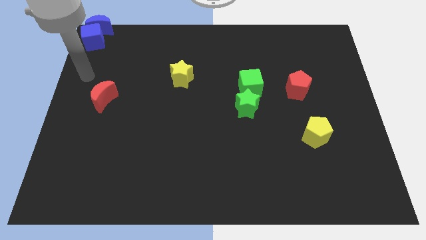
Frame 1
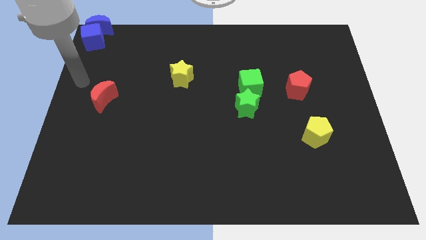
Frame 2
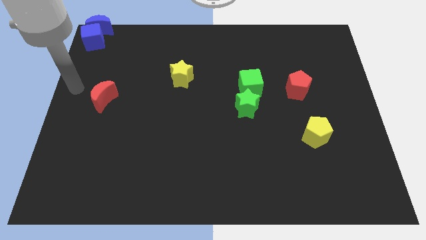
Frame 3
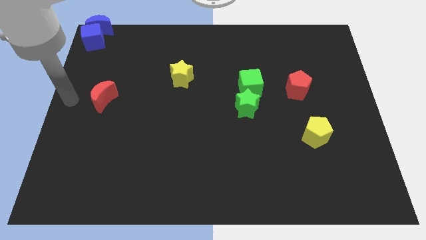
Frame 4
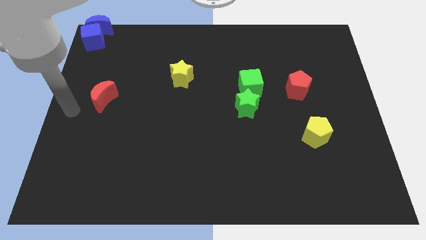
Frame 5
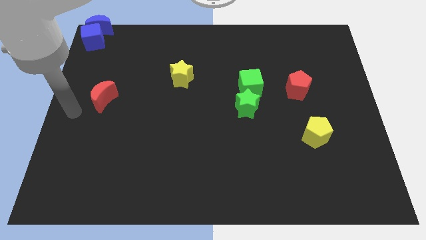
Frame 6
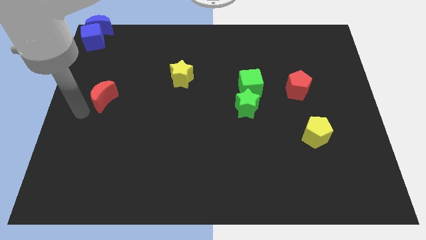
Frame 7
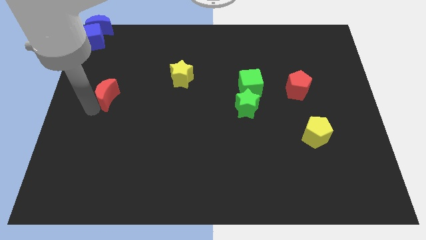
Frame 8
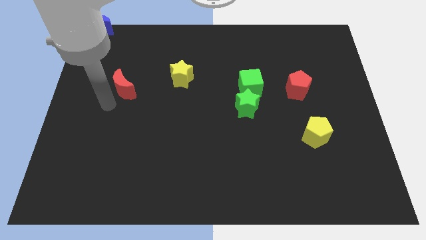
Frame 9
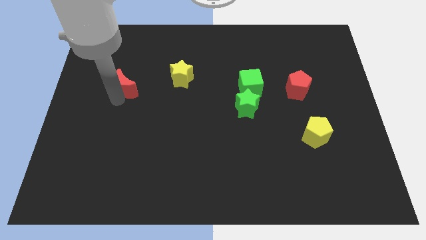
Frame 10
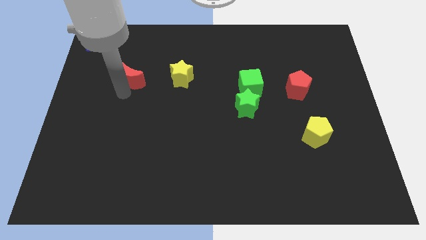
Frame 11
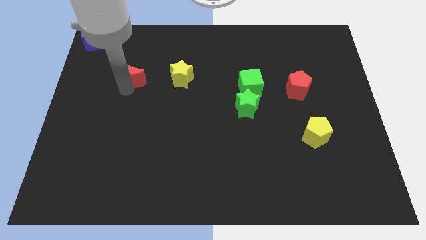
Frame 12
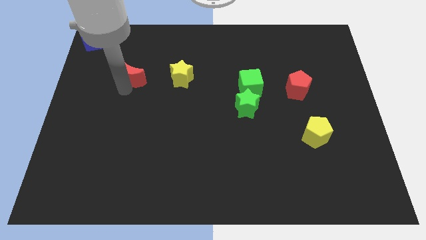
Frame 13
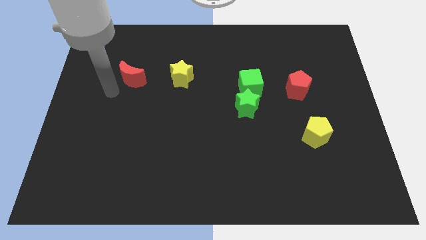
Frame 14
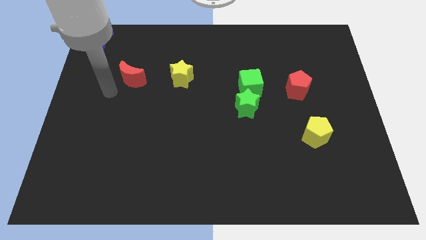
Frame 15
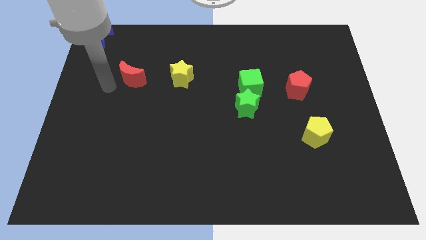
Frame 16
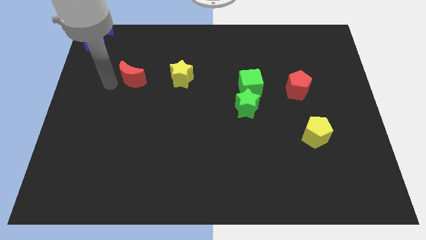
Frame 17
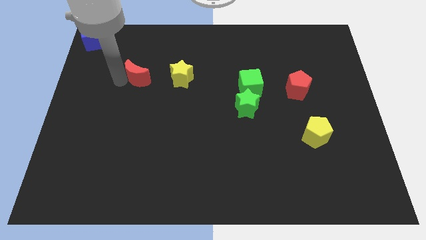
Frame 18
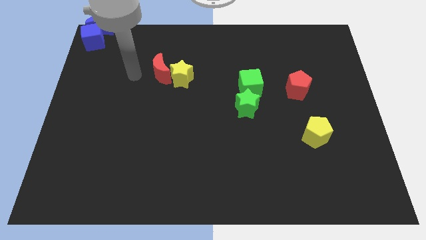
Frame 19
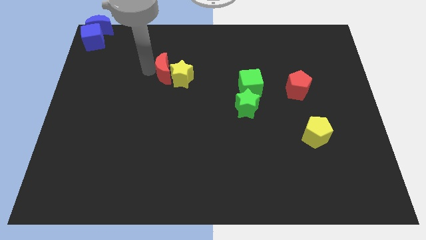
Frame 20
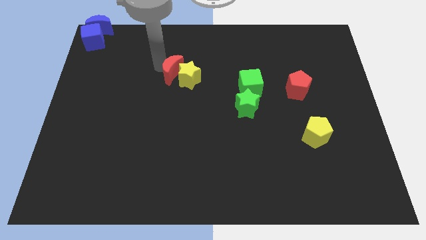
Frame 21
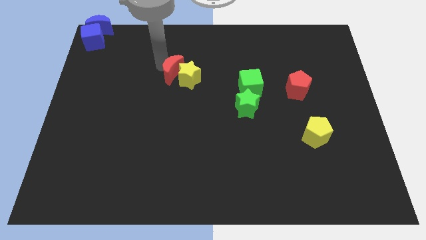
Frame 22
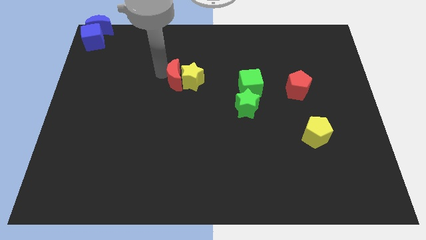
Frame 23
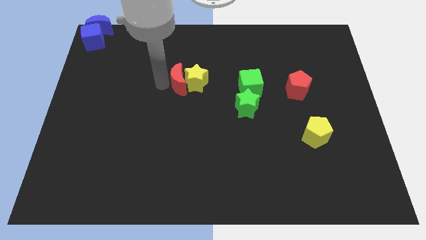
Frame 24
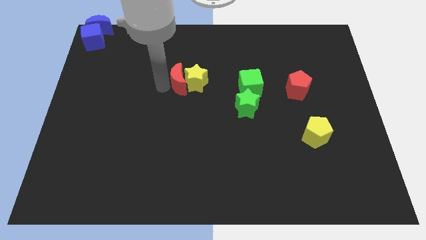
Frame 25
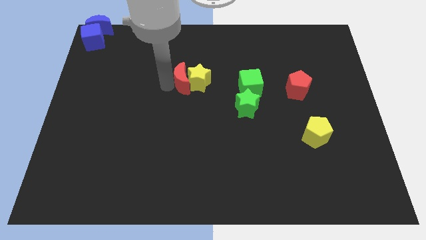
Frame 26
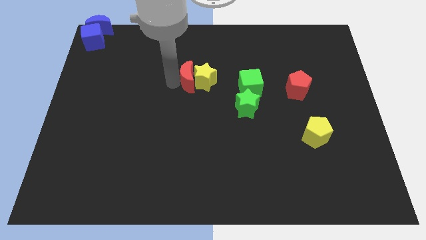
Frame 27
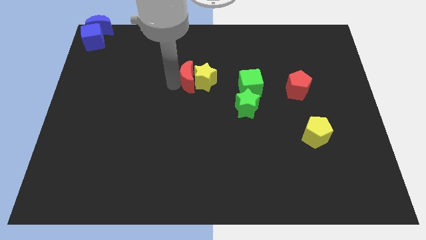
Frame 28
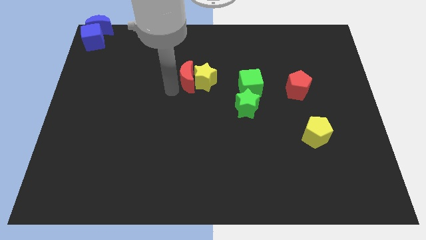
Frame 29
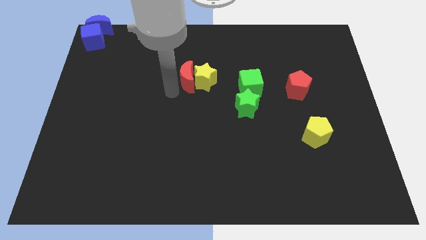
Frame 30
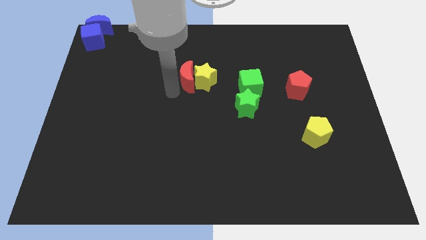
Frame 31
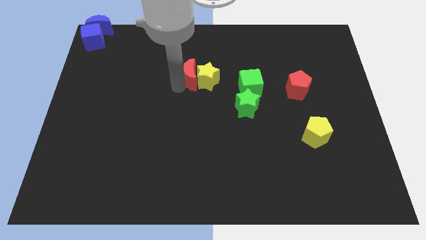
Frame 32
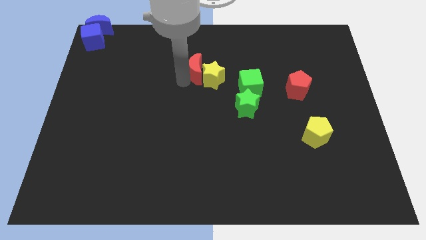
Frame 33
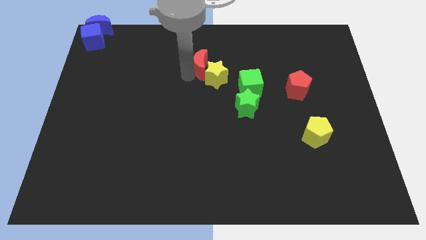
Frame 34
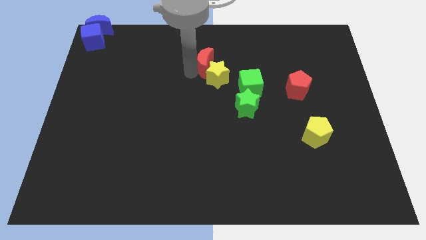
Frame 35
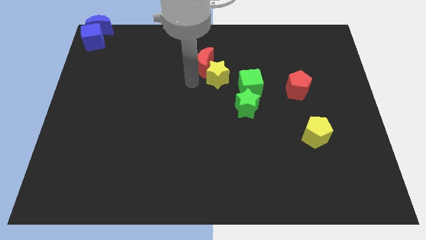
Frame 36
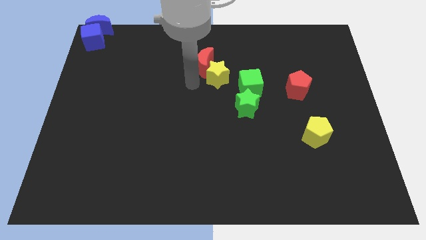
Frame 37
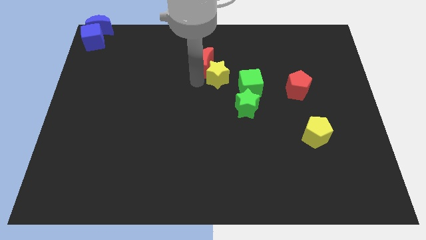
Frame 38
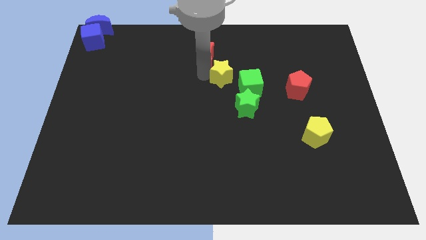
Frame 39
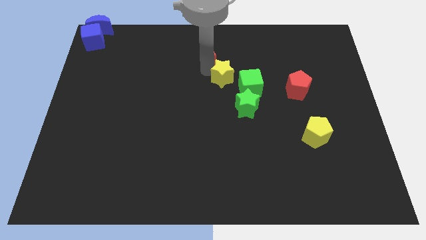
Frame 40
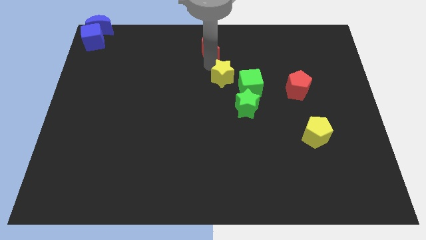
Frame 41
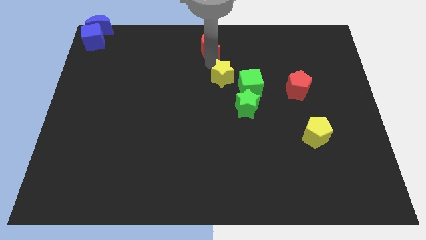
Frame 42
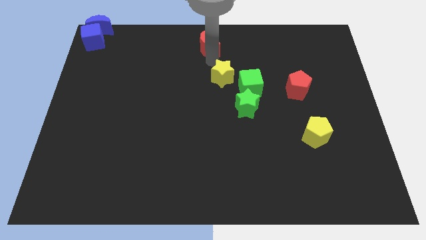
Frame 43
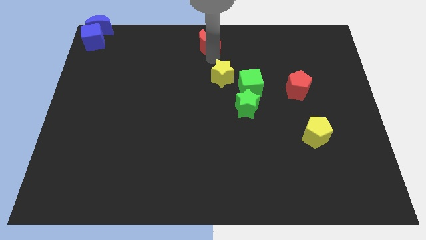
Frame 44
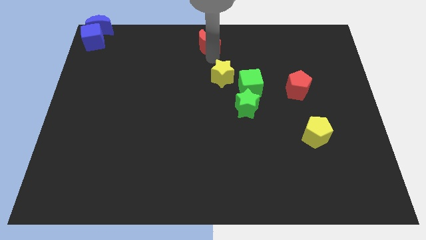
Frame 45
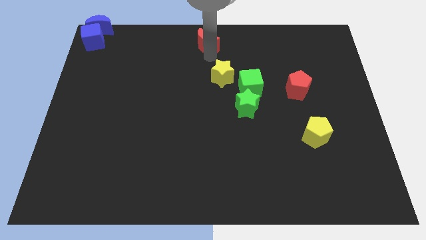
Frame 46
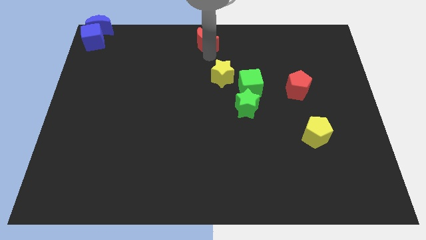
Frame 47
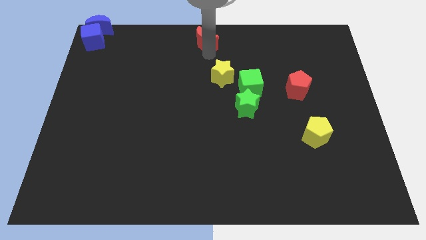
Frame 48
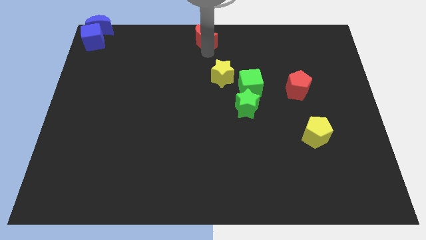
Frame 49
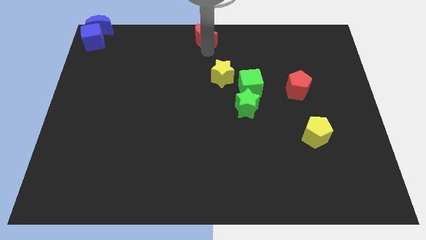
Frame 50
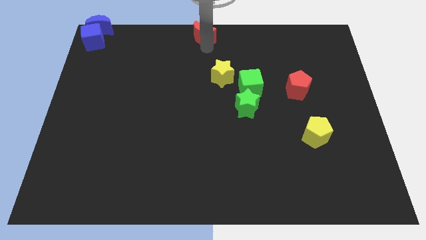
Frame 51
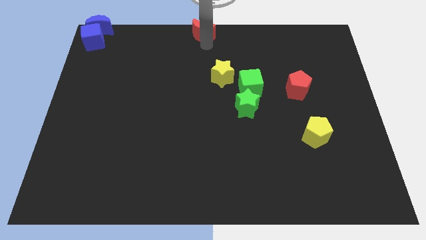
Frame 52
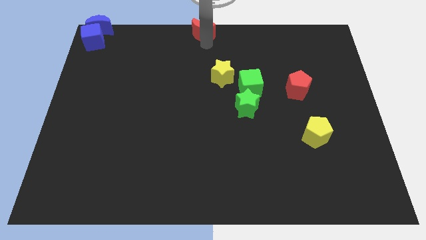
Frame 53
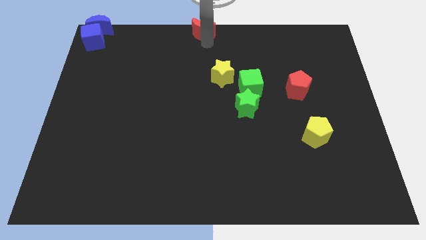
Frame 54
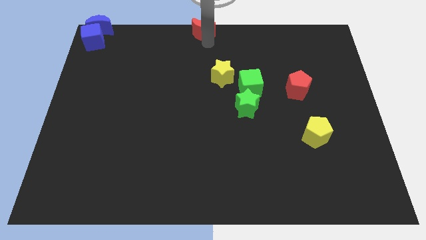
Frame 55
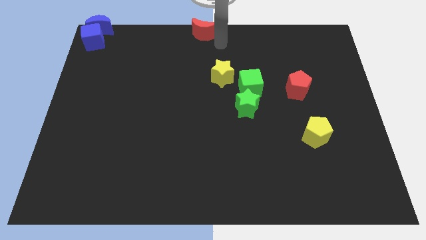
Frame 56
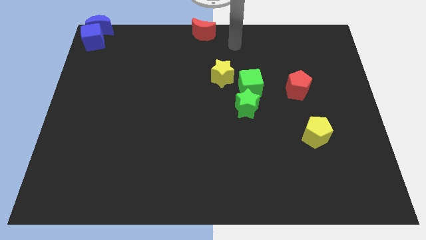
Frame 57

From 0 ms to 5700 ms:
place the red crescent to the top center of the board

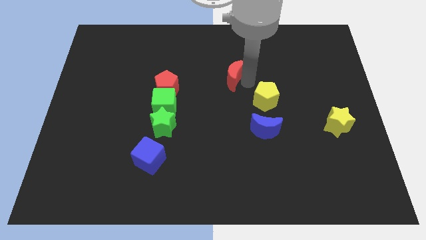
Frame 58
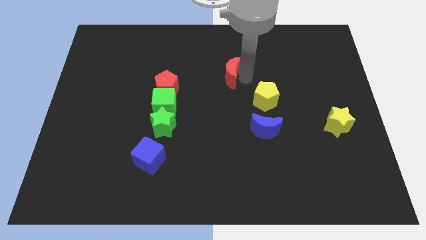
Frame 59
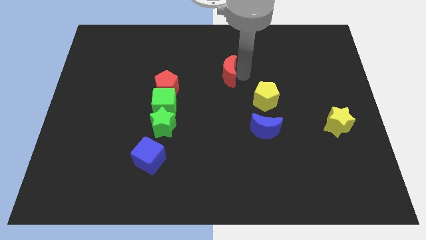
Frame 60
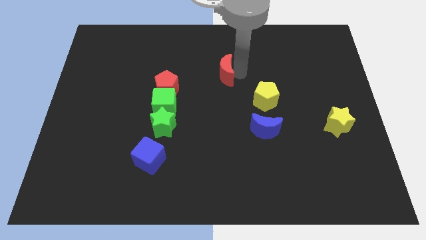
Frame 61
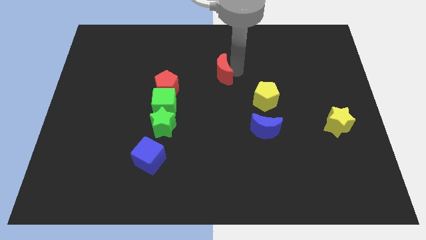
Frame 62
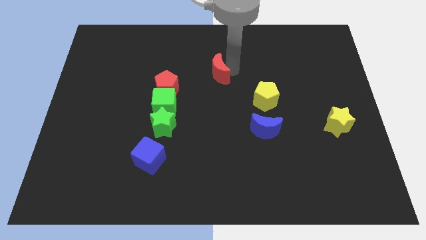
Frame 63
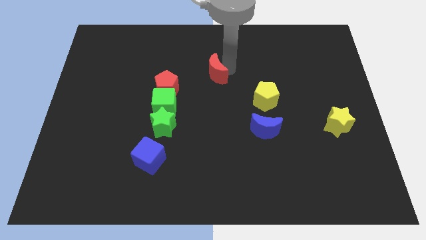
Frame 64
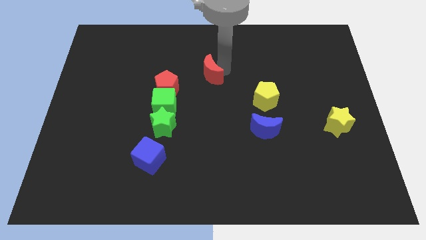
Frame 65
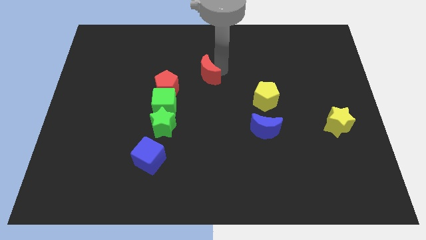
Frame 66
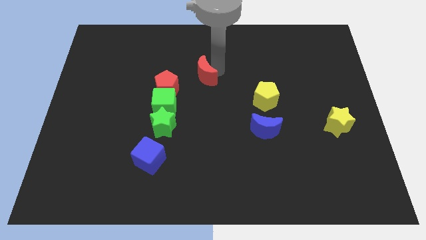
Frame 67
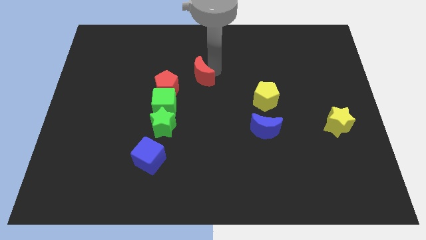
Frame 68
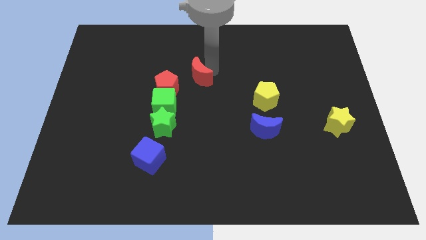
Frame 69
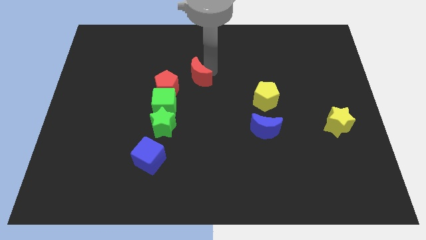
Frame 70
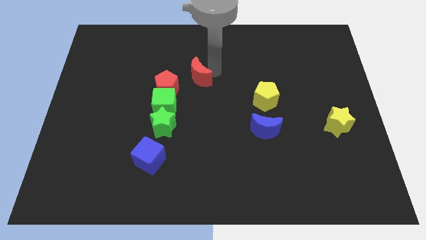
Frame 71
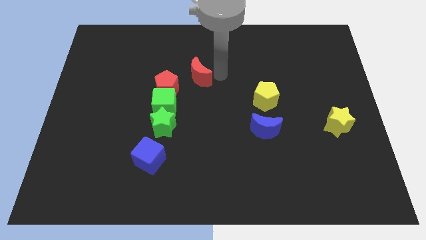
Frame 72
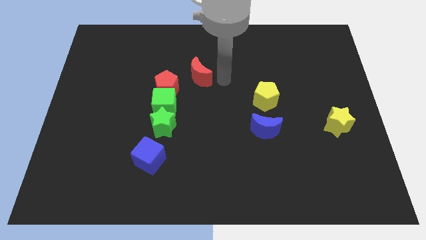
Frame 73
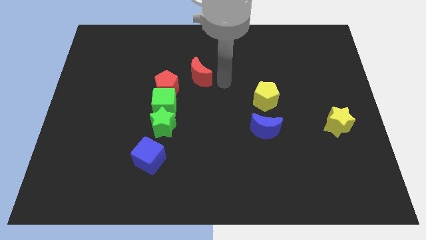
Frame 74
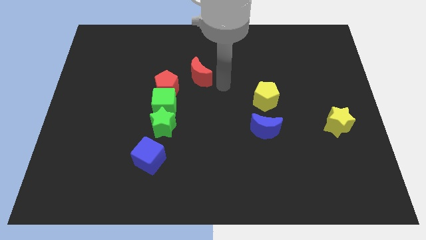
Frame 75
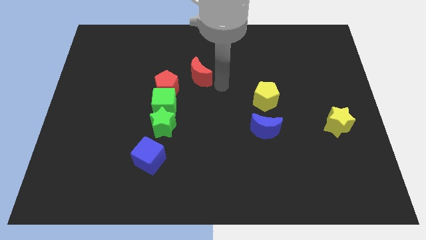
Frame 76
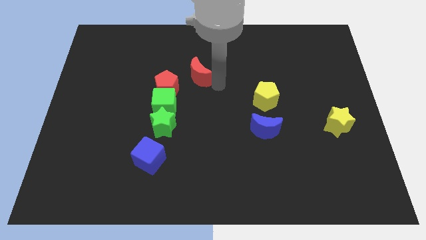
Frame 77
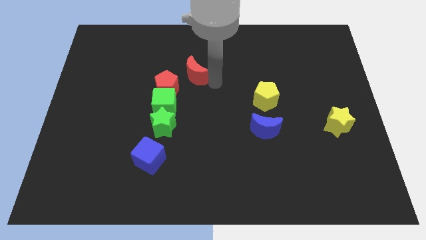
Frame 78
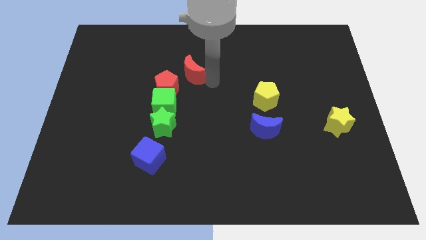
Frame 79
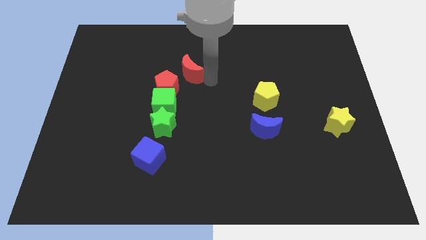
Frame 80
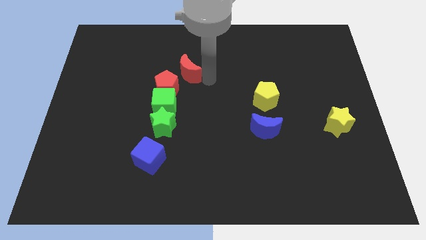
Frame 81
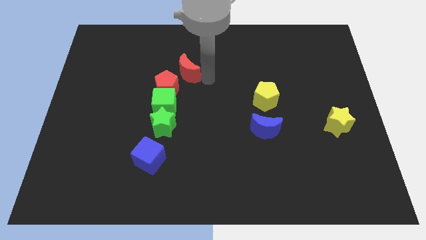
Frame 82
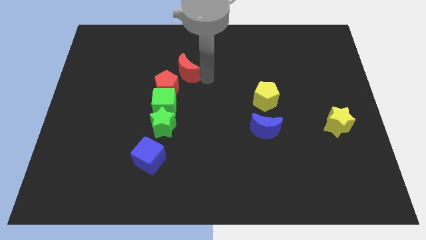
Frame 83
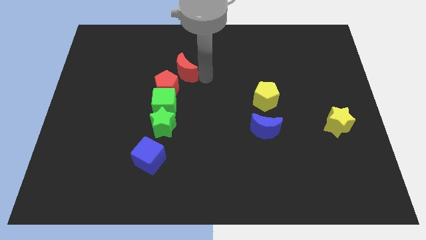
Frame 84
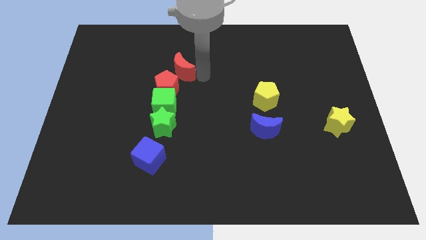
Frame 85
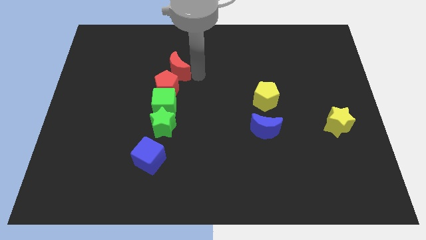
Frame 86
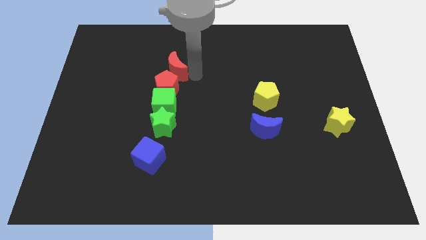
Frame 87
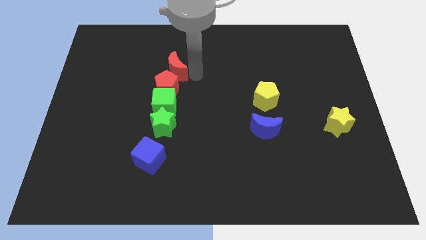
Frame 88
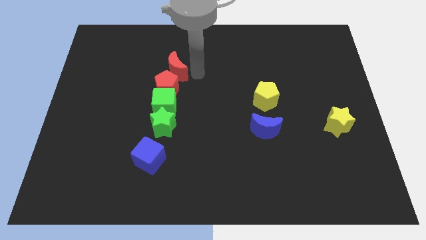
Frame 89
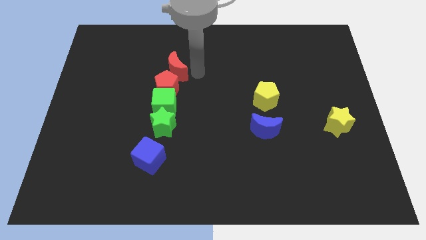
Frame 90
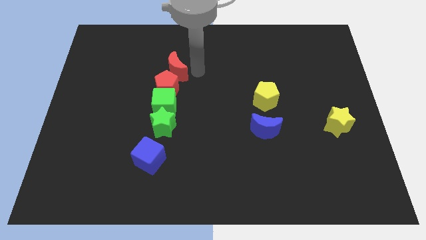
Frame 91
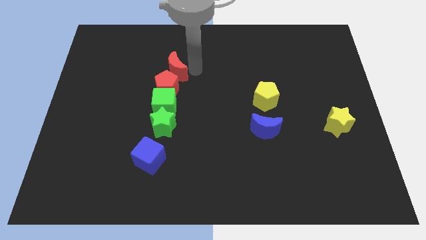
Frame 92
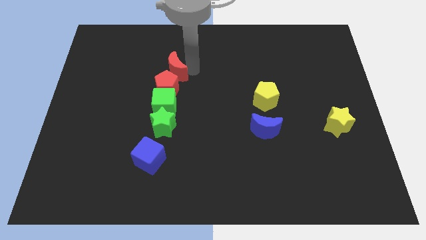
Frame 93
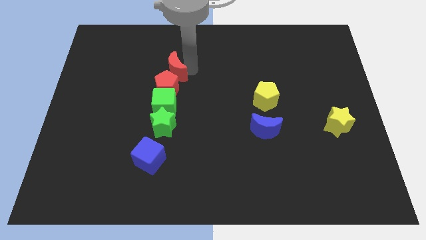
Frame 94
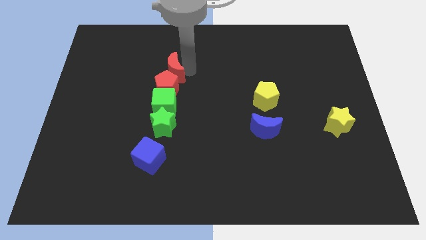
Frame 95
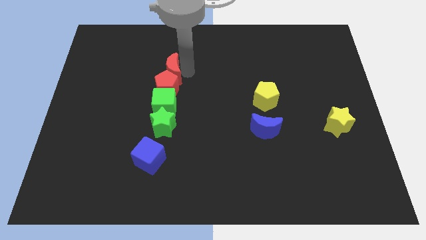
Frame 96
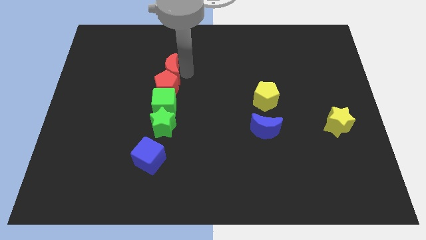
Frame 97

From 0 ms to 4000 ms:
place the red crescent above the red pentagon
